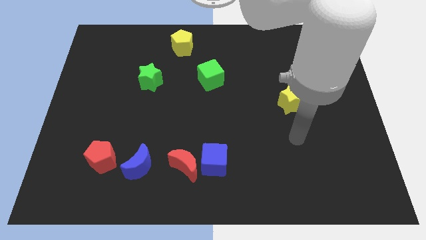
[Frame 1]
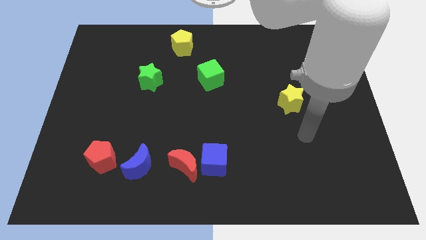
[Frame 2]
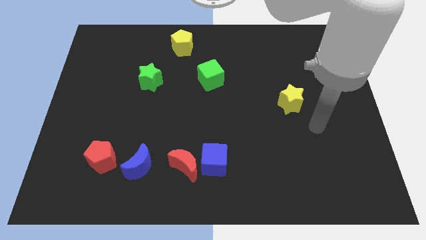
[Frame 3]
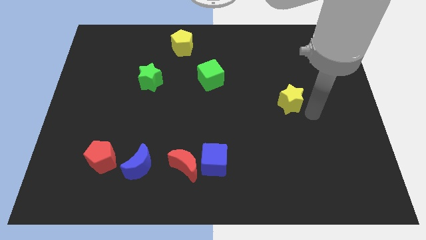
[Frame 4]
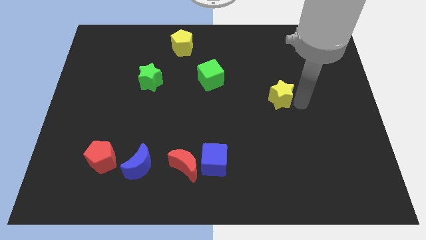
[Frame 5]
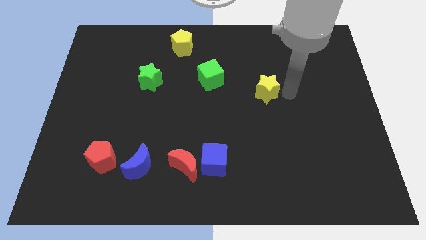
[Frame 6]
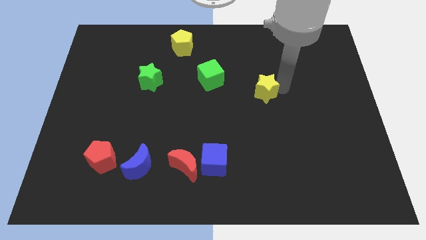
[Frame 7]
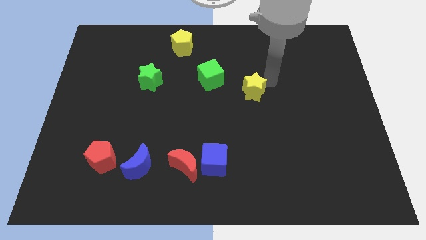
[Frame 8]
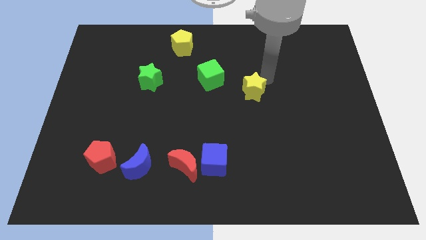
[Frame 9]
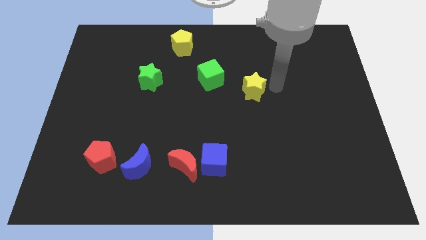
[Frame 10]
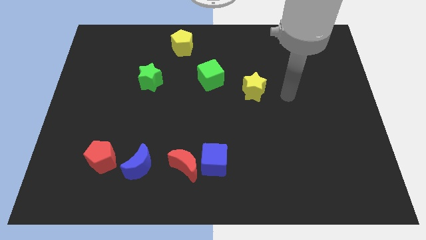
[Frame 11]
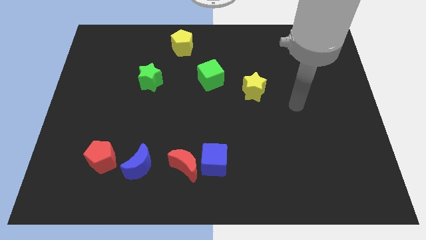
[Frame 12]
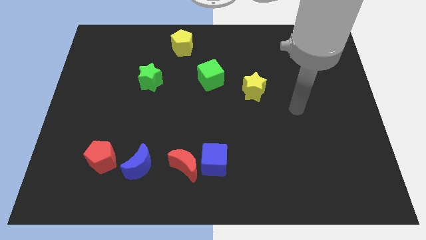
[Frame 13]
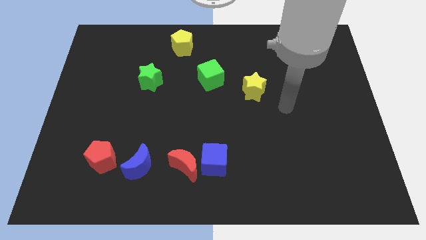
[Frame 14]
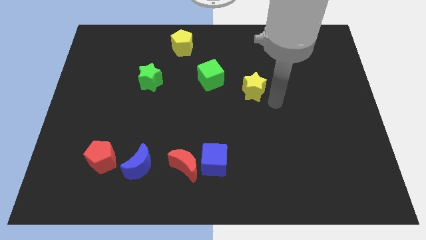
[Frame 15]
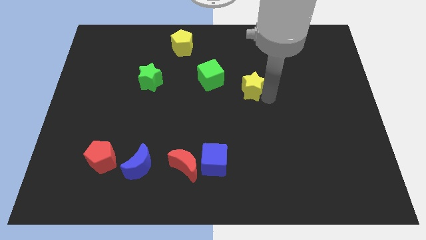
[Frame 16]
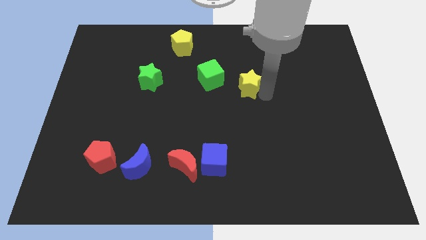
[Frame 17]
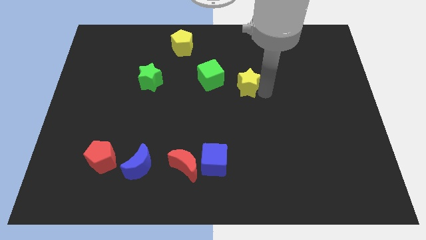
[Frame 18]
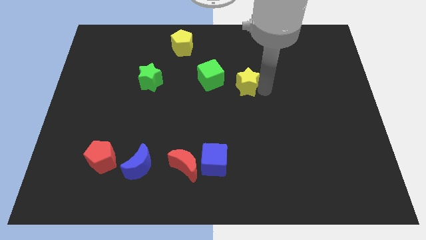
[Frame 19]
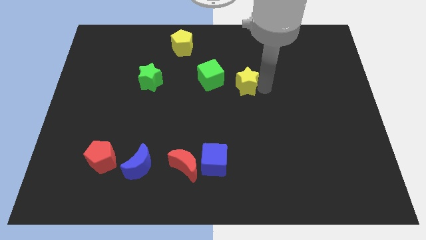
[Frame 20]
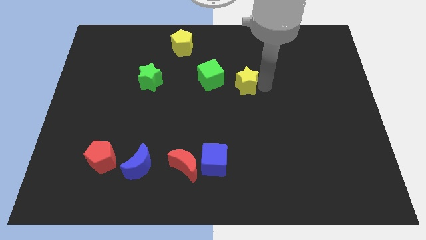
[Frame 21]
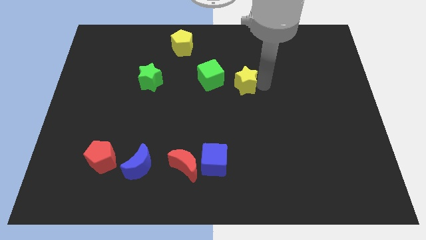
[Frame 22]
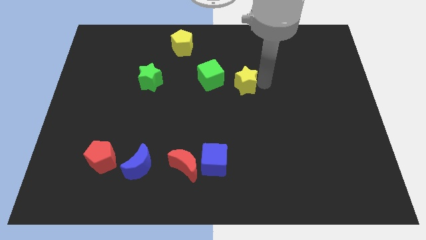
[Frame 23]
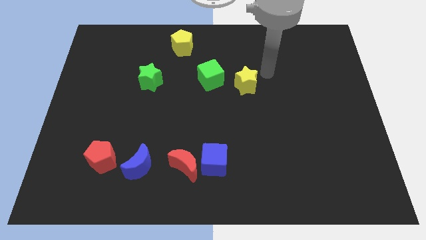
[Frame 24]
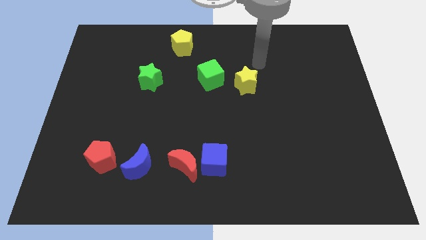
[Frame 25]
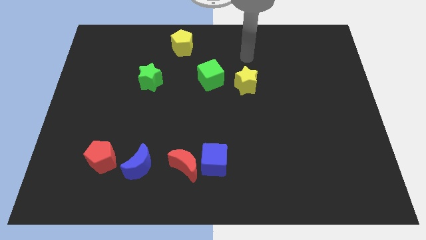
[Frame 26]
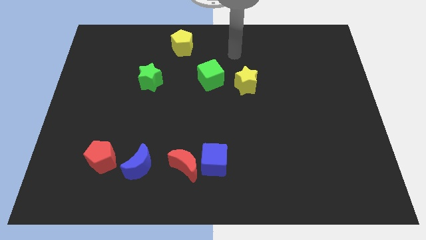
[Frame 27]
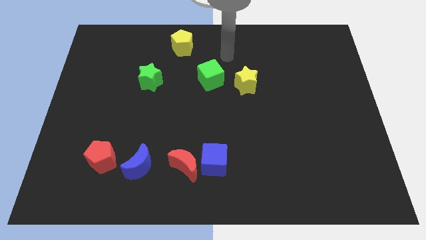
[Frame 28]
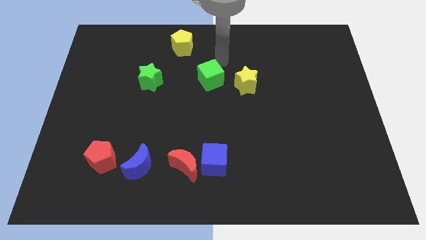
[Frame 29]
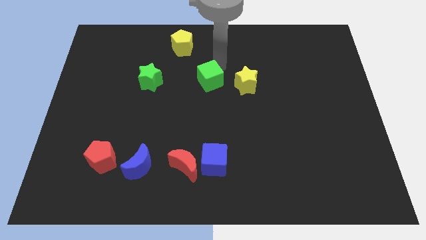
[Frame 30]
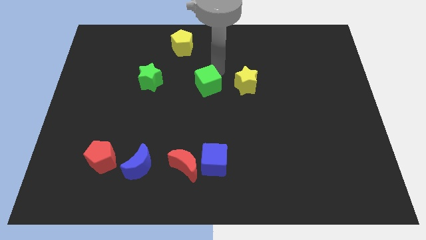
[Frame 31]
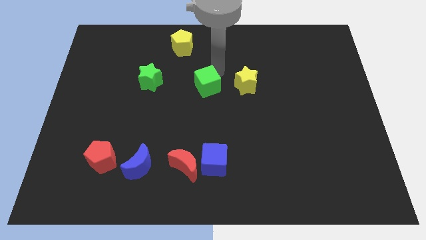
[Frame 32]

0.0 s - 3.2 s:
place the yellow star and green cube in a horizontal line at the right of the green star

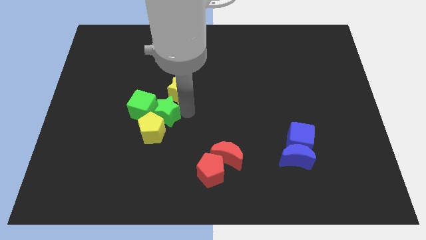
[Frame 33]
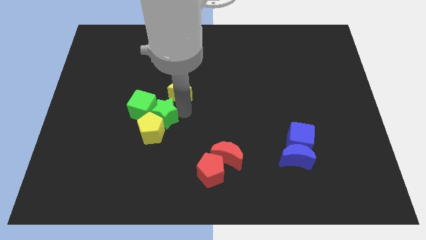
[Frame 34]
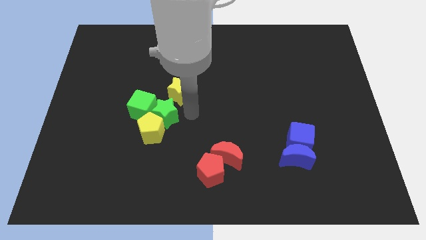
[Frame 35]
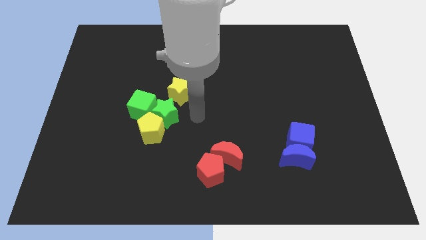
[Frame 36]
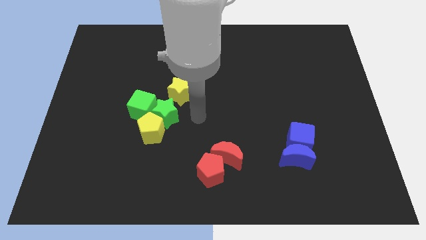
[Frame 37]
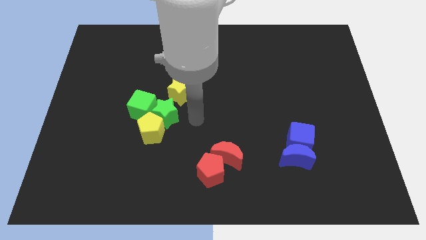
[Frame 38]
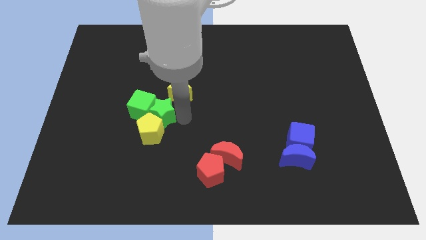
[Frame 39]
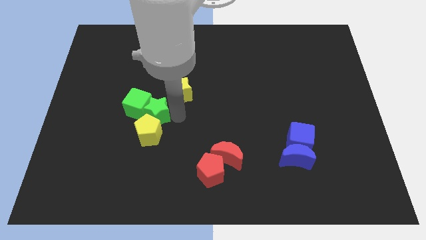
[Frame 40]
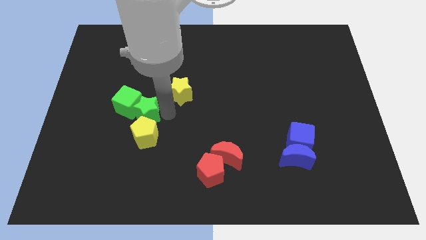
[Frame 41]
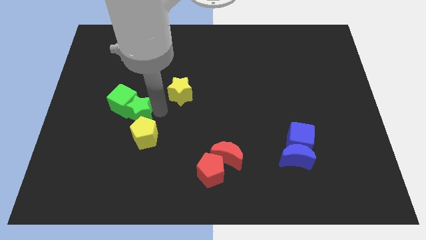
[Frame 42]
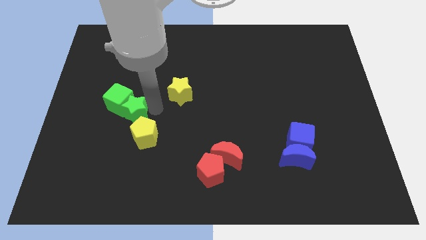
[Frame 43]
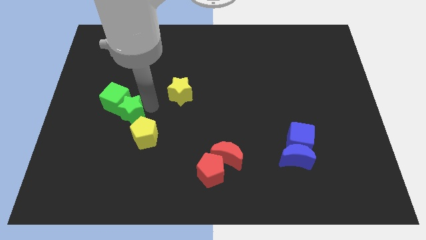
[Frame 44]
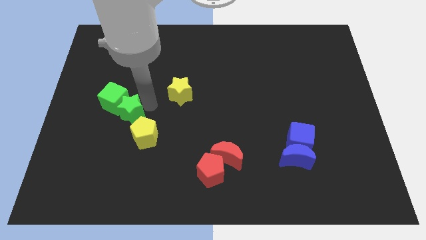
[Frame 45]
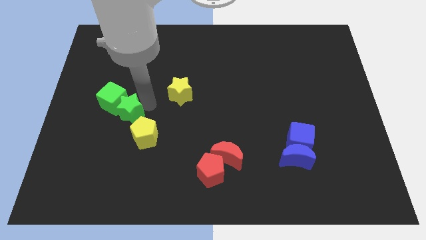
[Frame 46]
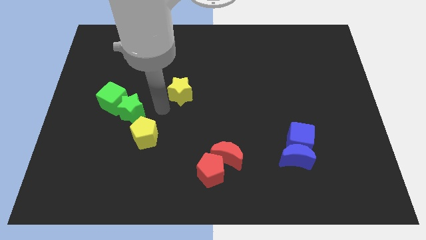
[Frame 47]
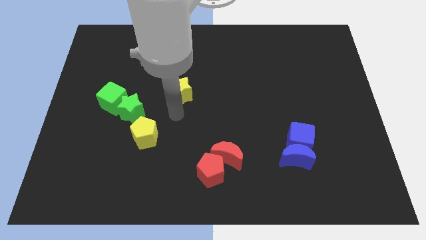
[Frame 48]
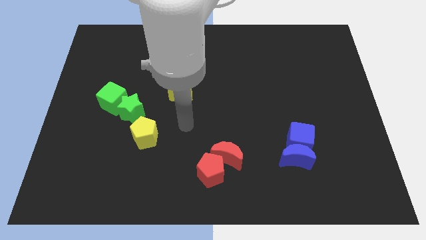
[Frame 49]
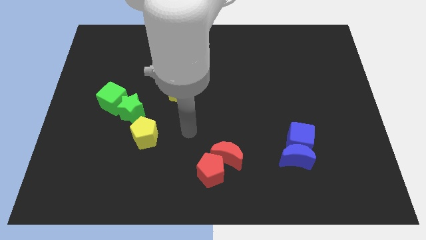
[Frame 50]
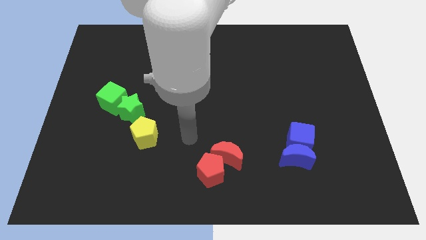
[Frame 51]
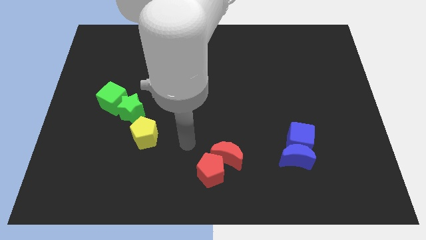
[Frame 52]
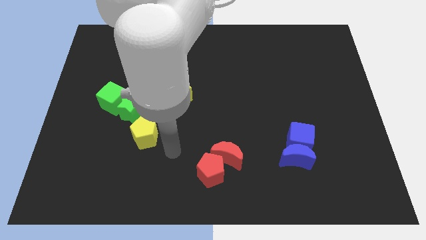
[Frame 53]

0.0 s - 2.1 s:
slide the green star and green cube diagonally to the yellow pentagon

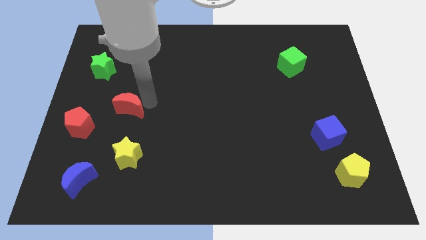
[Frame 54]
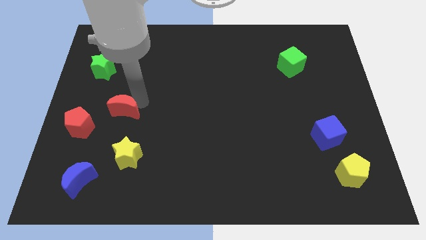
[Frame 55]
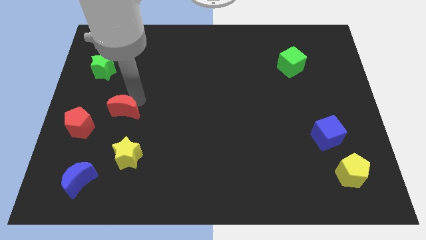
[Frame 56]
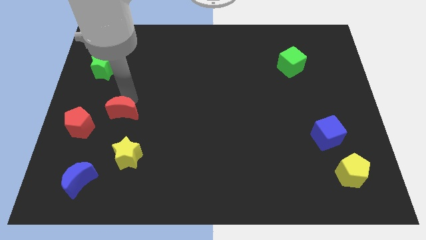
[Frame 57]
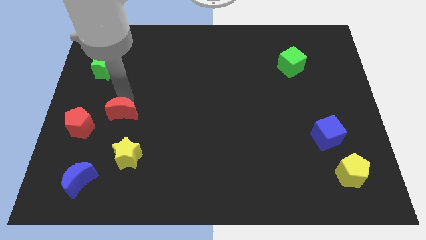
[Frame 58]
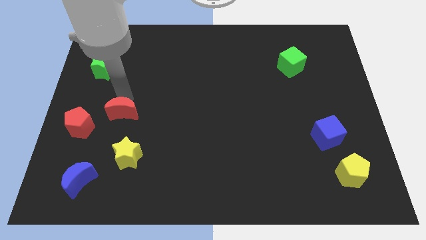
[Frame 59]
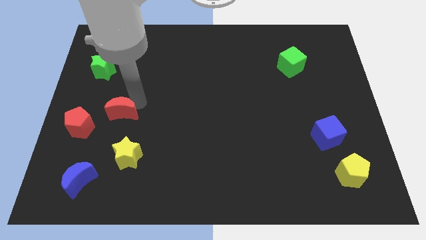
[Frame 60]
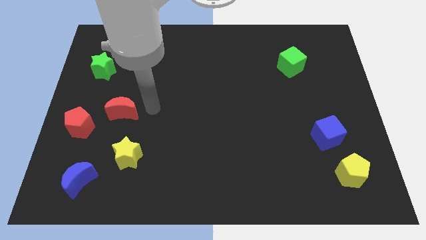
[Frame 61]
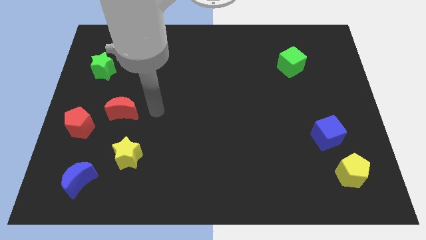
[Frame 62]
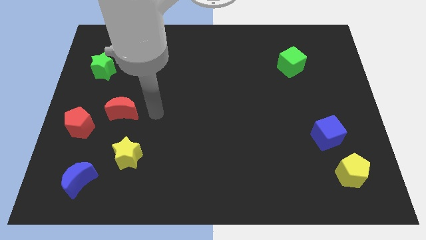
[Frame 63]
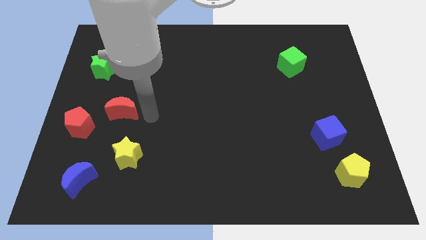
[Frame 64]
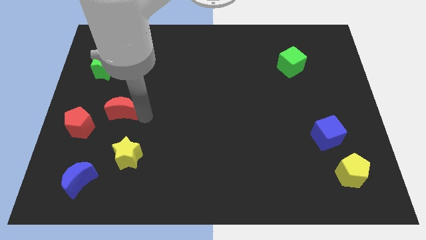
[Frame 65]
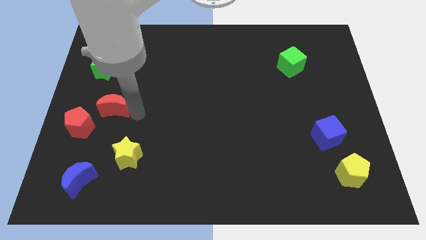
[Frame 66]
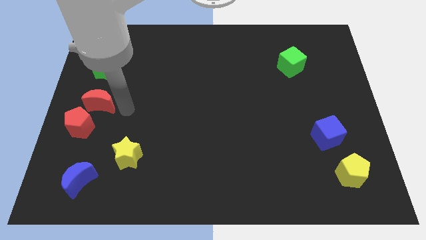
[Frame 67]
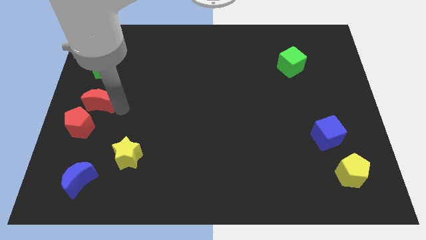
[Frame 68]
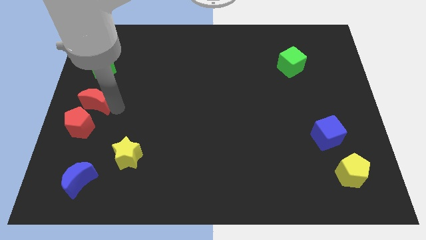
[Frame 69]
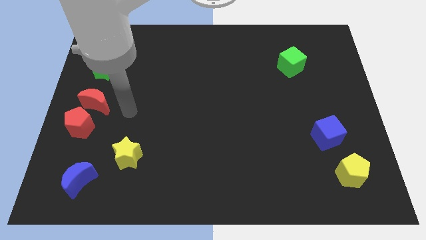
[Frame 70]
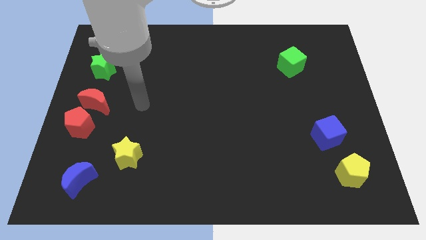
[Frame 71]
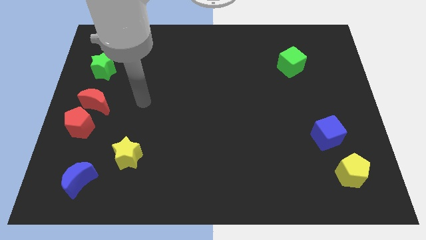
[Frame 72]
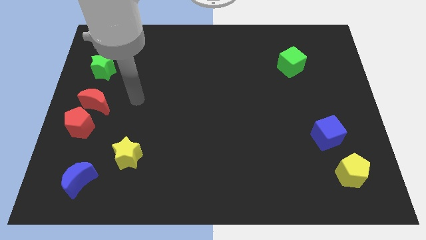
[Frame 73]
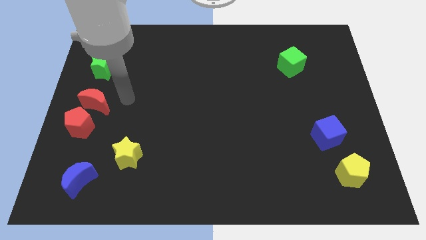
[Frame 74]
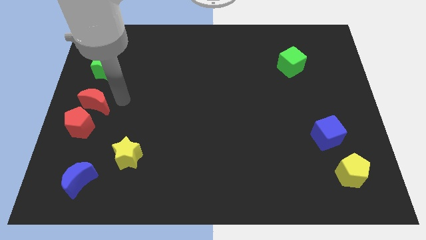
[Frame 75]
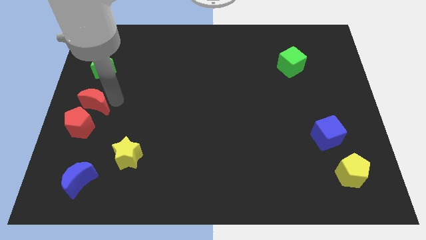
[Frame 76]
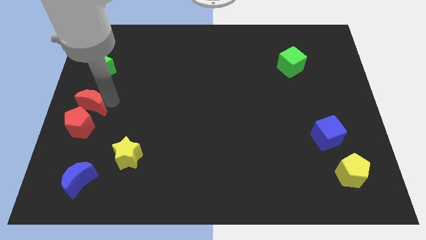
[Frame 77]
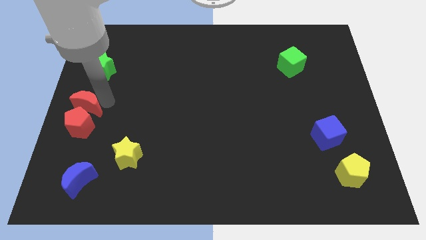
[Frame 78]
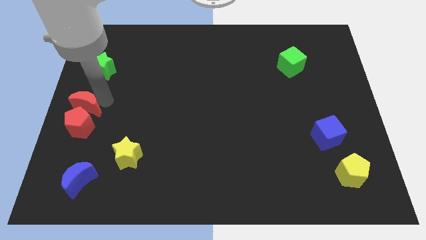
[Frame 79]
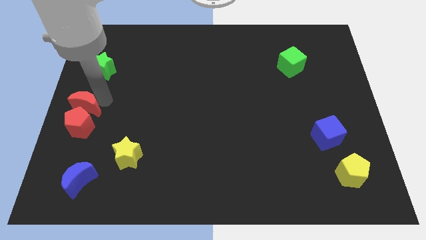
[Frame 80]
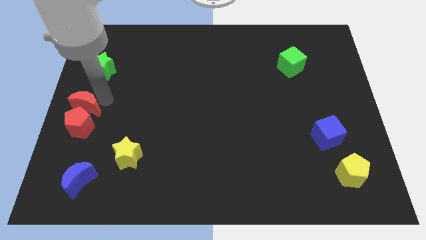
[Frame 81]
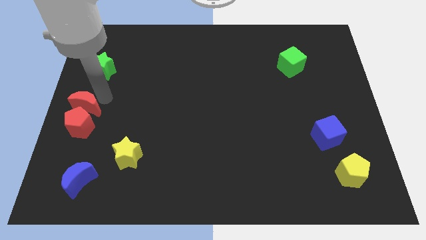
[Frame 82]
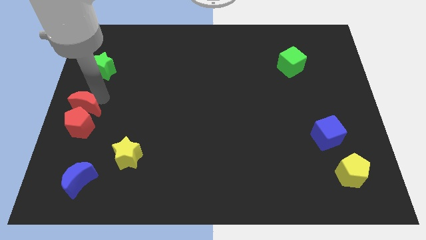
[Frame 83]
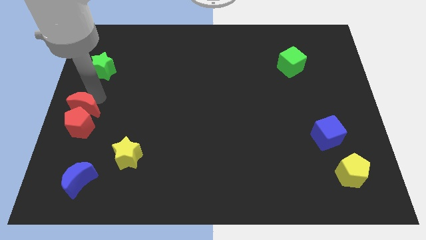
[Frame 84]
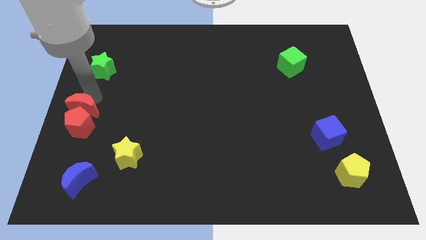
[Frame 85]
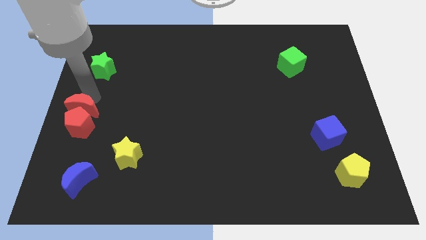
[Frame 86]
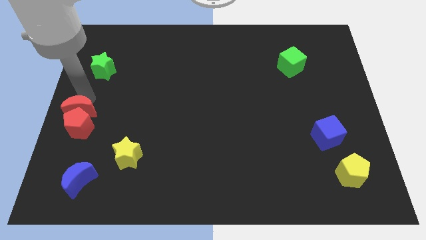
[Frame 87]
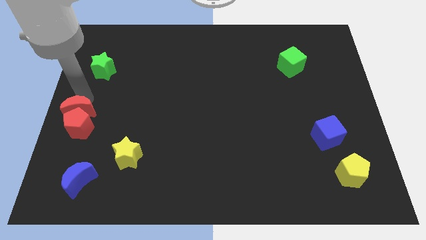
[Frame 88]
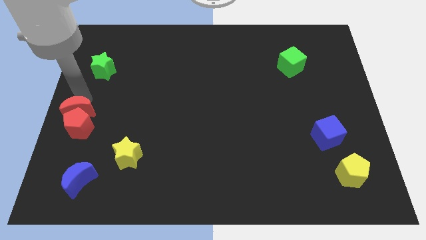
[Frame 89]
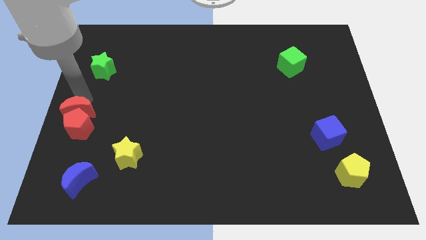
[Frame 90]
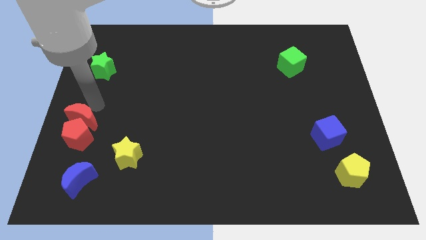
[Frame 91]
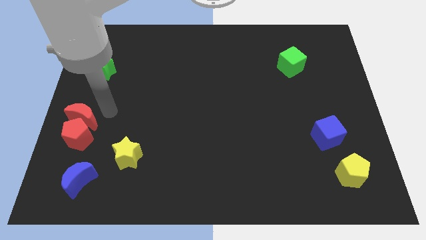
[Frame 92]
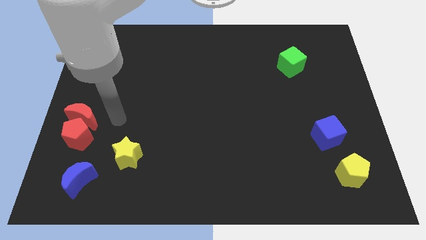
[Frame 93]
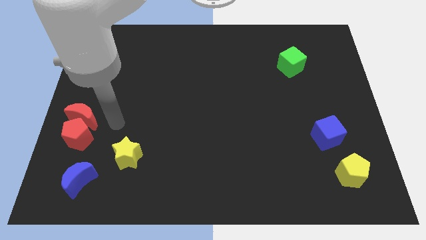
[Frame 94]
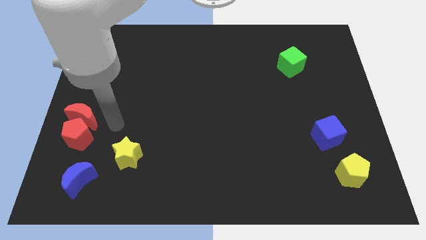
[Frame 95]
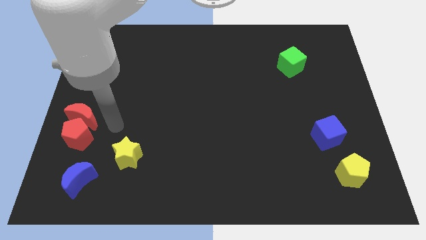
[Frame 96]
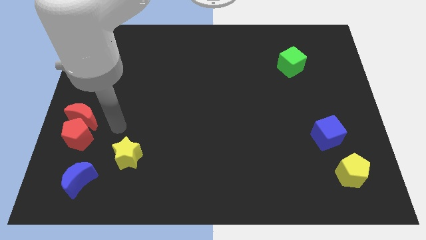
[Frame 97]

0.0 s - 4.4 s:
slide the red moon into the red pentagon
